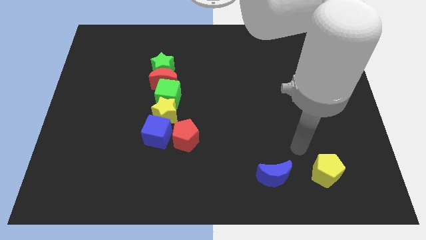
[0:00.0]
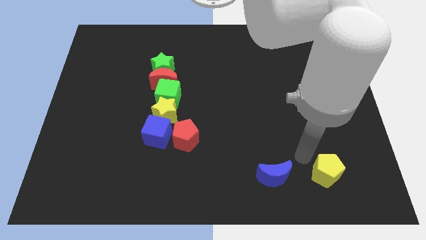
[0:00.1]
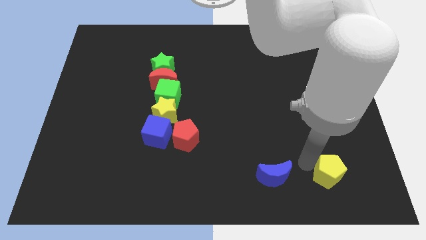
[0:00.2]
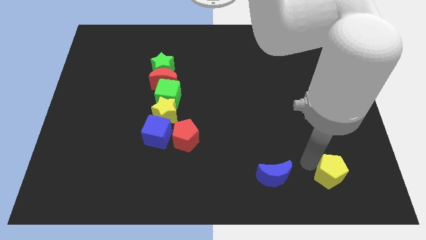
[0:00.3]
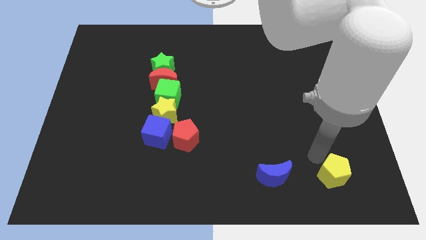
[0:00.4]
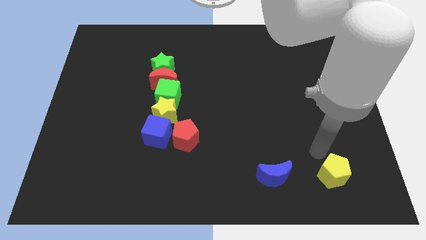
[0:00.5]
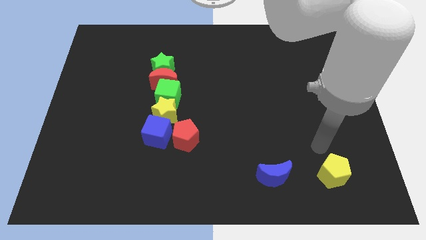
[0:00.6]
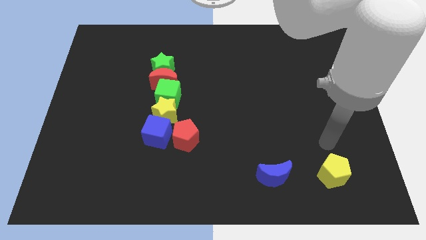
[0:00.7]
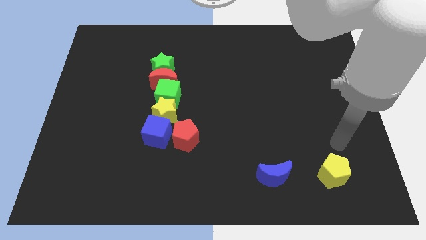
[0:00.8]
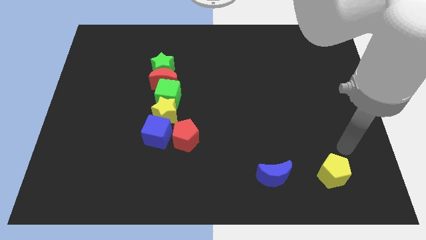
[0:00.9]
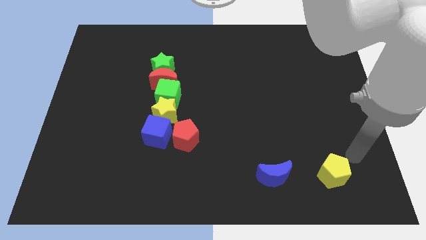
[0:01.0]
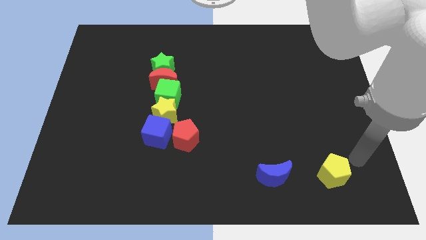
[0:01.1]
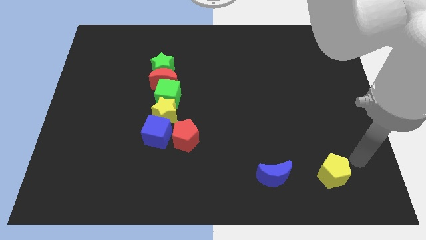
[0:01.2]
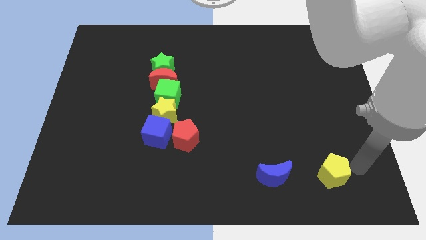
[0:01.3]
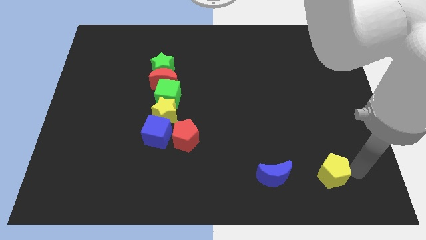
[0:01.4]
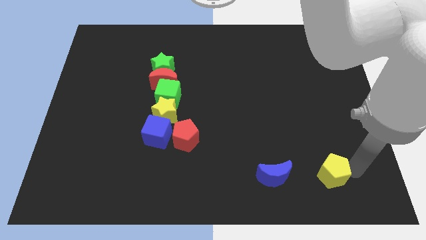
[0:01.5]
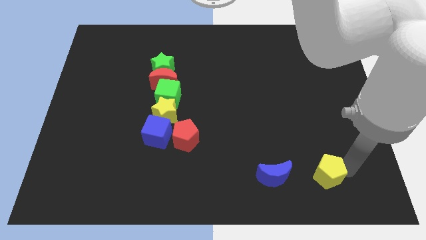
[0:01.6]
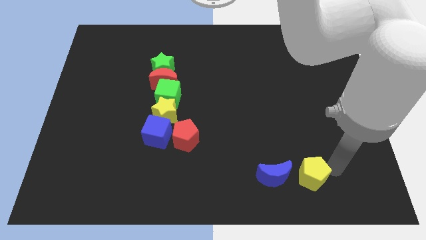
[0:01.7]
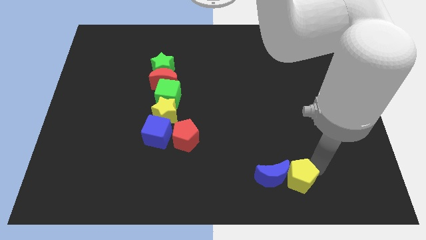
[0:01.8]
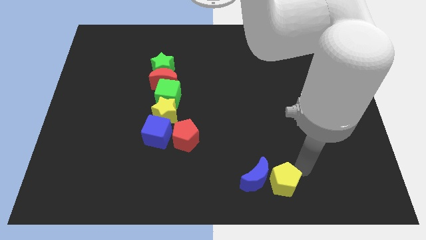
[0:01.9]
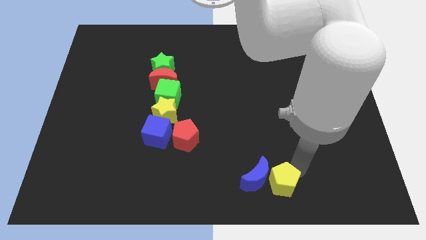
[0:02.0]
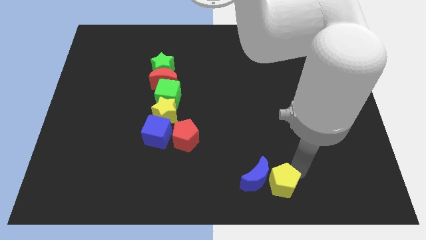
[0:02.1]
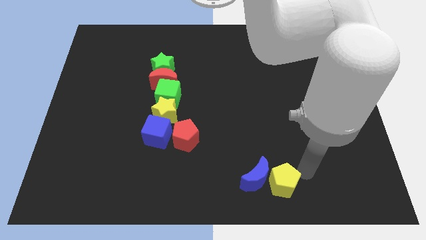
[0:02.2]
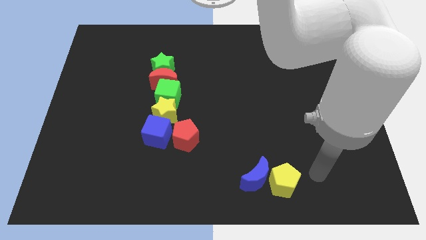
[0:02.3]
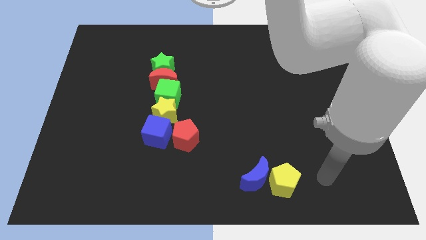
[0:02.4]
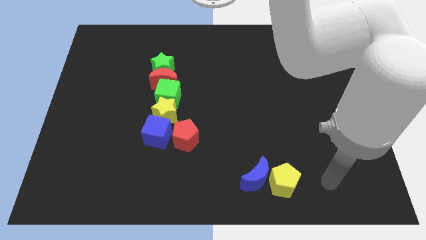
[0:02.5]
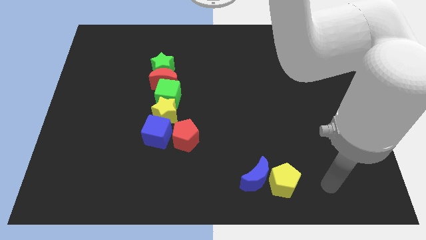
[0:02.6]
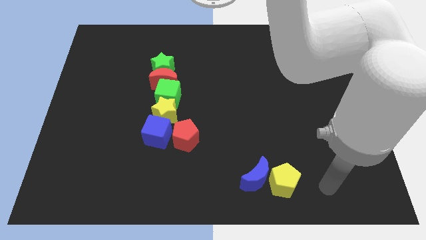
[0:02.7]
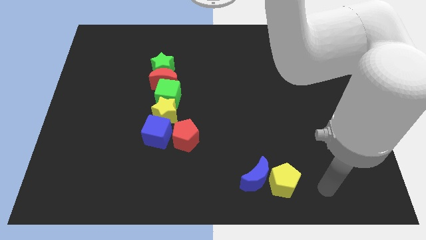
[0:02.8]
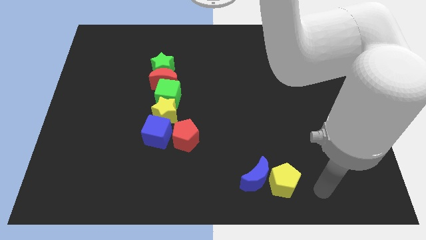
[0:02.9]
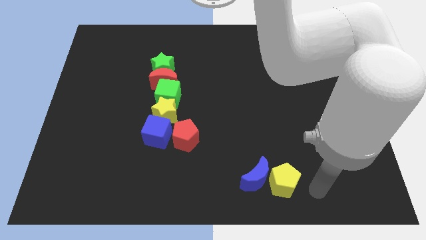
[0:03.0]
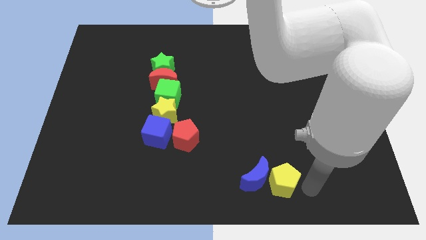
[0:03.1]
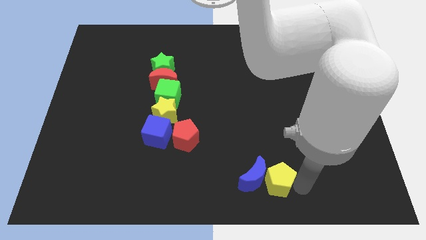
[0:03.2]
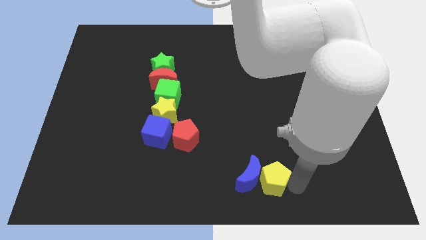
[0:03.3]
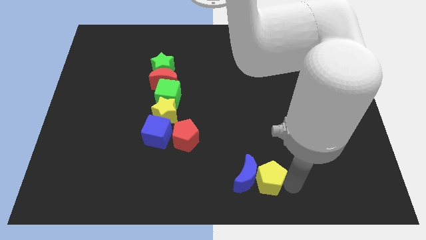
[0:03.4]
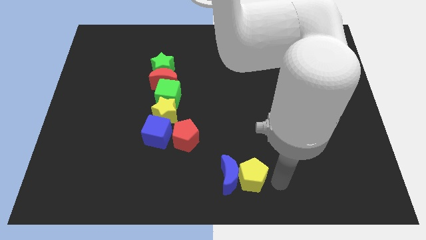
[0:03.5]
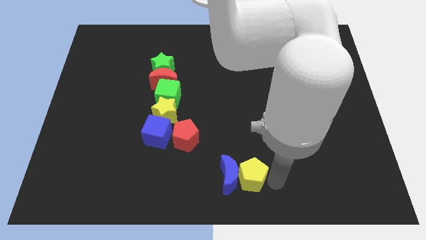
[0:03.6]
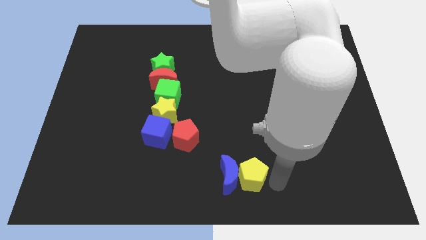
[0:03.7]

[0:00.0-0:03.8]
move the yellow pentagon and blue crescent to the bottom center of the board

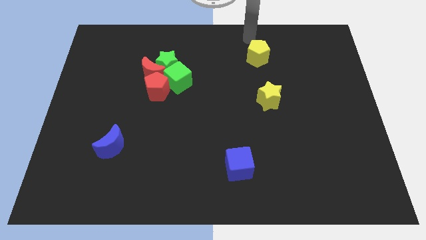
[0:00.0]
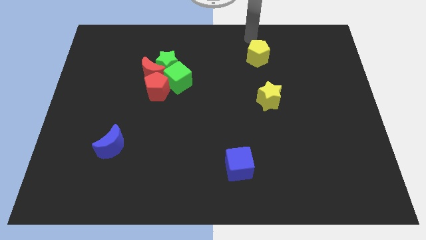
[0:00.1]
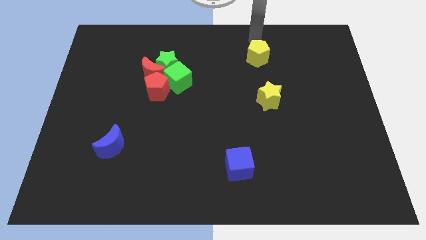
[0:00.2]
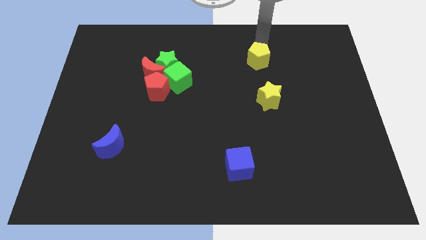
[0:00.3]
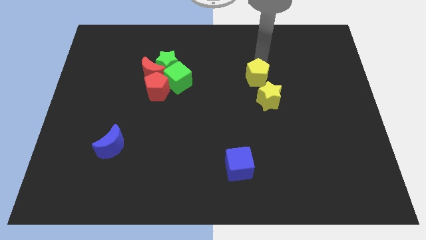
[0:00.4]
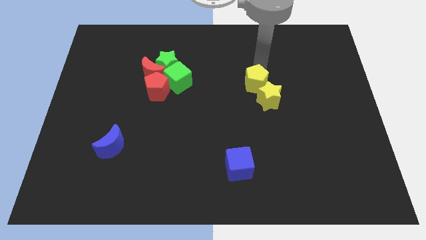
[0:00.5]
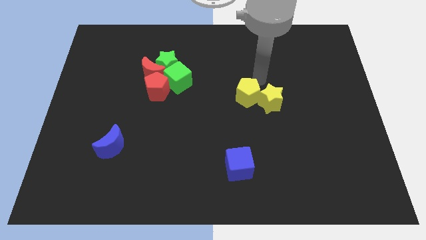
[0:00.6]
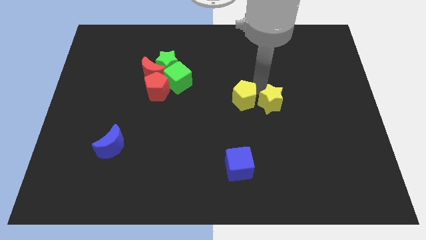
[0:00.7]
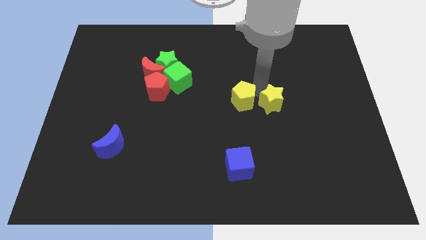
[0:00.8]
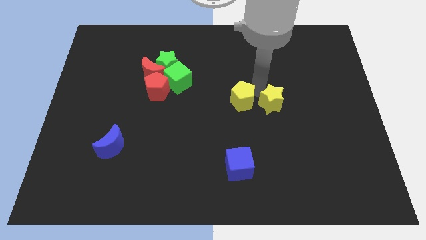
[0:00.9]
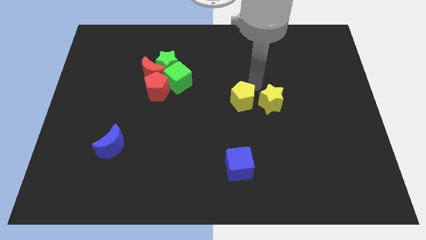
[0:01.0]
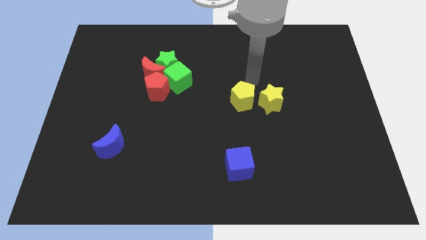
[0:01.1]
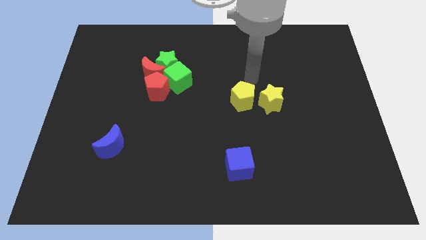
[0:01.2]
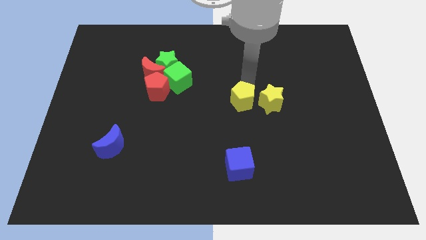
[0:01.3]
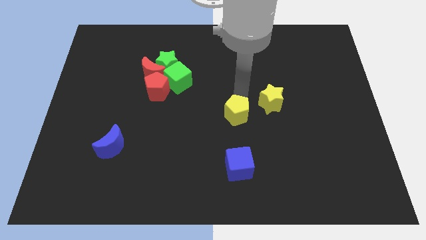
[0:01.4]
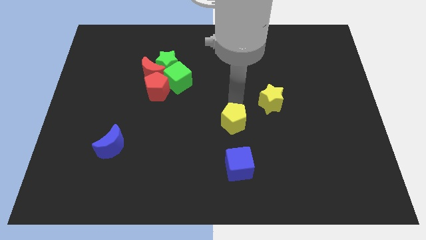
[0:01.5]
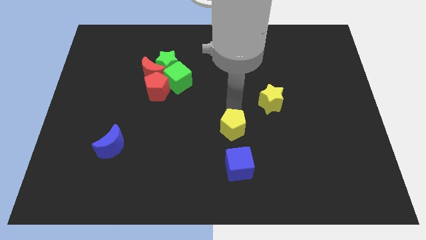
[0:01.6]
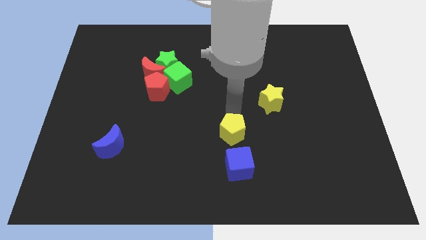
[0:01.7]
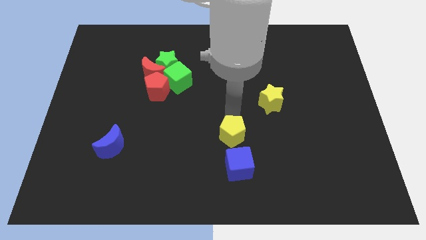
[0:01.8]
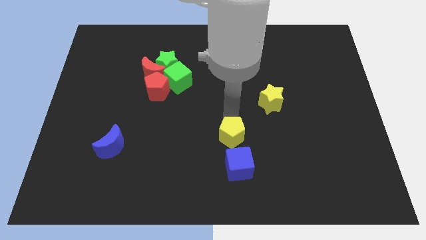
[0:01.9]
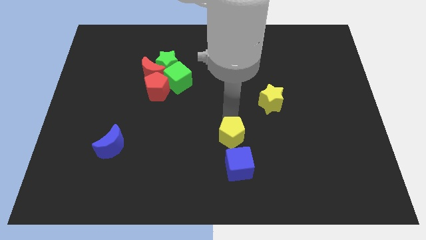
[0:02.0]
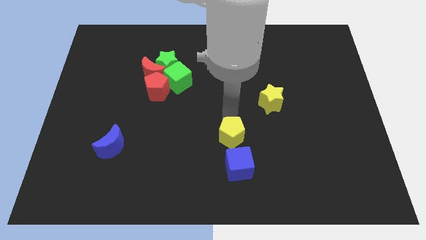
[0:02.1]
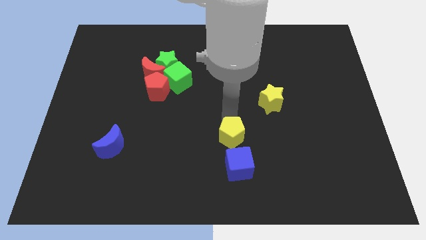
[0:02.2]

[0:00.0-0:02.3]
push the yellow pentagon middle of the board

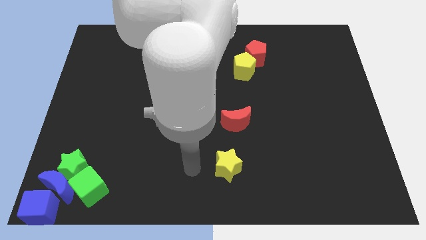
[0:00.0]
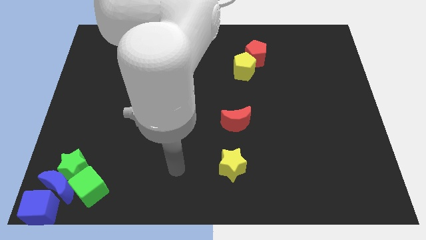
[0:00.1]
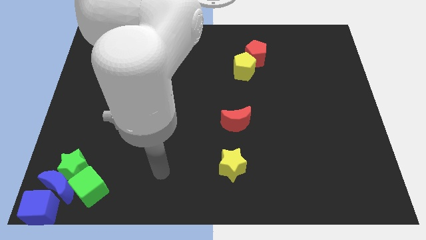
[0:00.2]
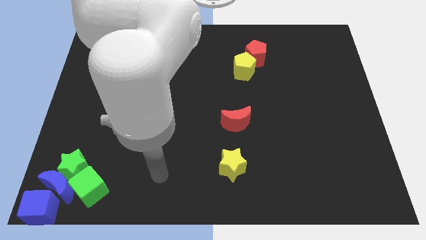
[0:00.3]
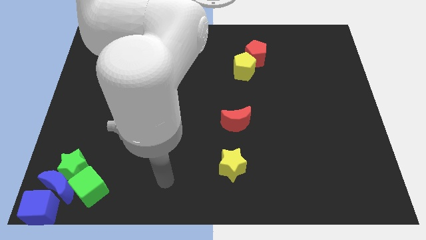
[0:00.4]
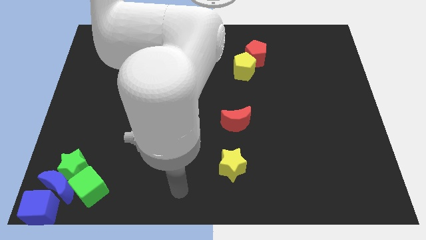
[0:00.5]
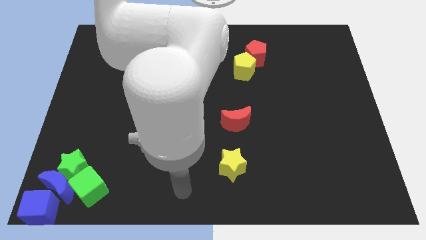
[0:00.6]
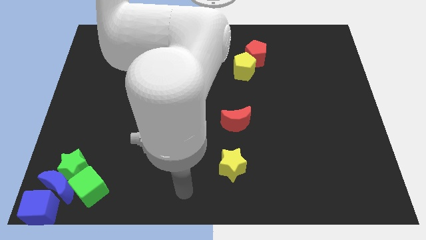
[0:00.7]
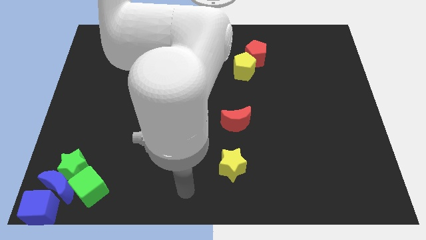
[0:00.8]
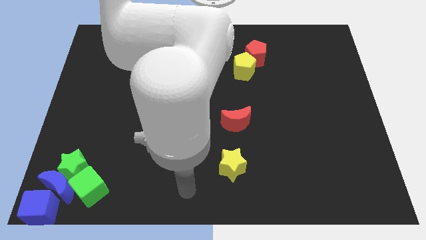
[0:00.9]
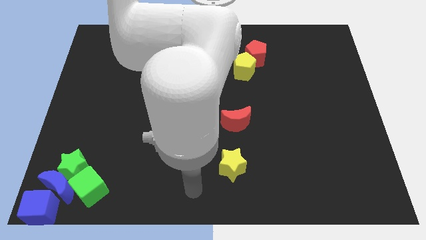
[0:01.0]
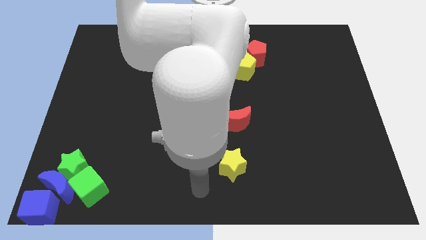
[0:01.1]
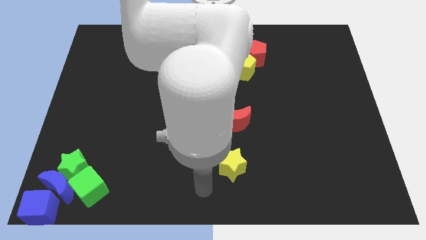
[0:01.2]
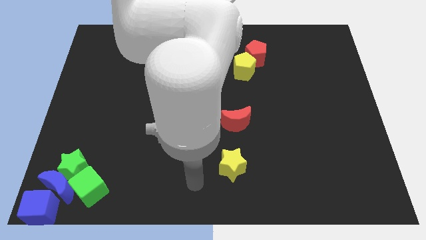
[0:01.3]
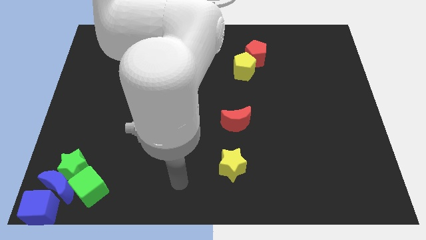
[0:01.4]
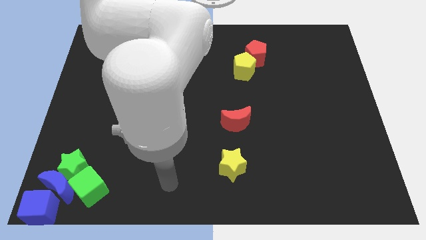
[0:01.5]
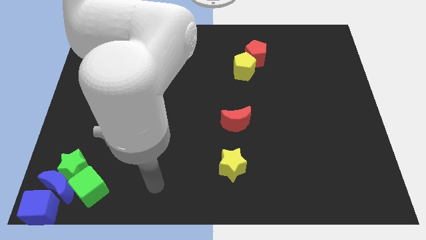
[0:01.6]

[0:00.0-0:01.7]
place your arm in between the green cube and yellow star

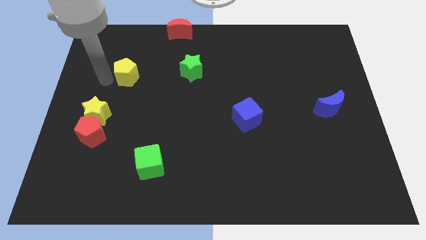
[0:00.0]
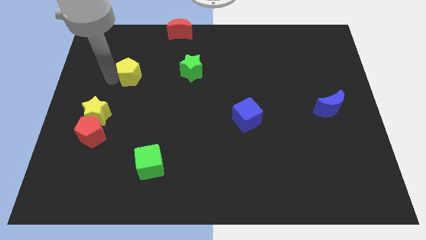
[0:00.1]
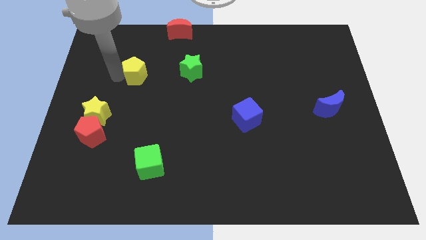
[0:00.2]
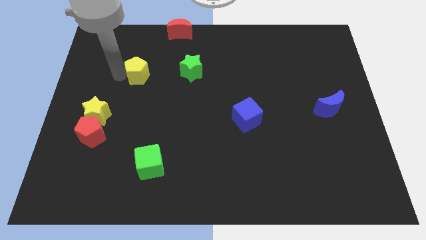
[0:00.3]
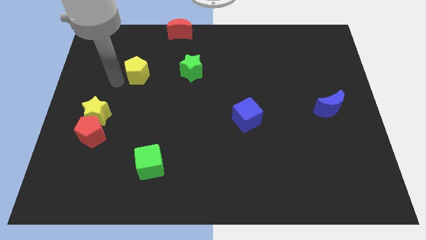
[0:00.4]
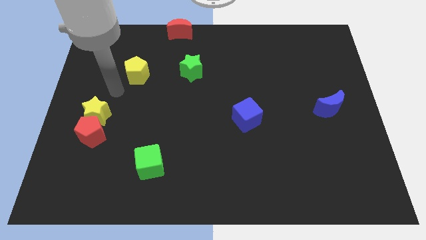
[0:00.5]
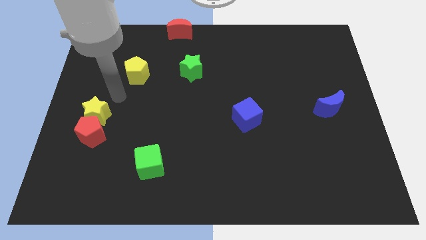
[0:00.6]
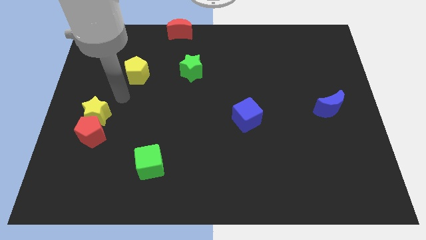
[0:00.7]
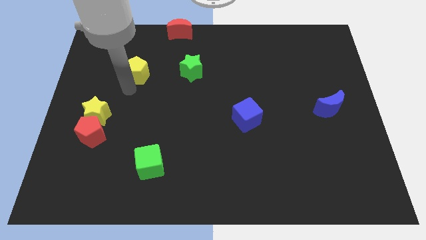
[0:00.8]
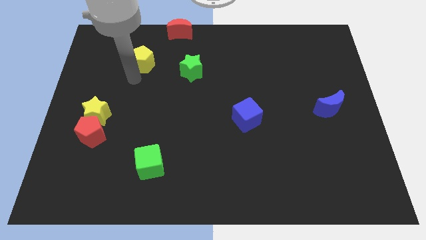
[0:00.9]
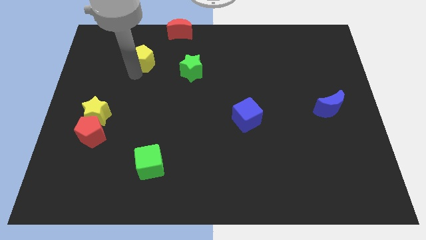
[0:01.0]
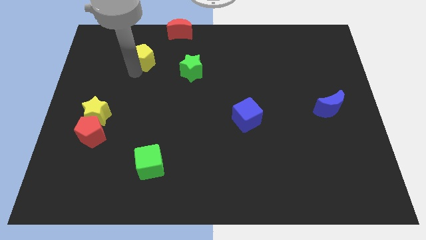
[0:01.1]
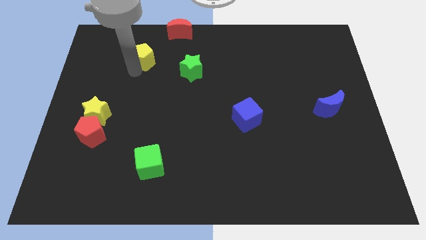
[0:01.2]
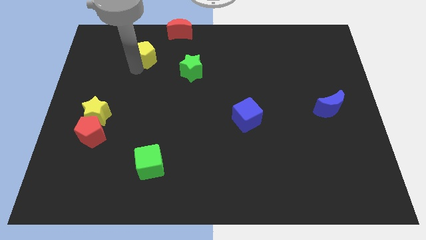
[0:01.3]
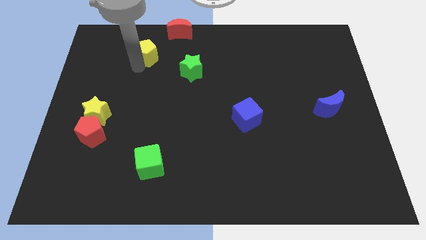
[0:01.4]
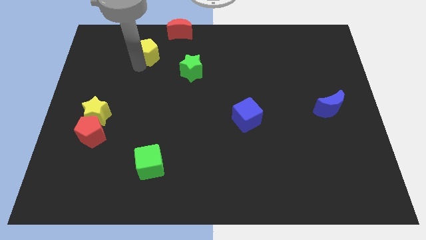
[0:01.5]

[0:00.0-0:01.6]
drag the yellow pentagon slightly upwards
